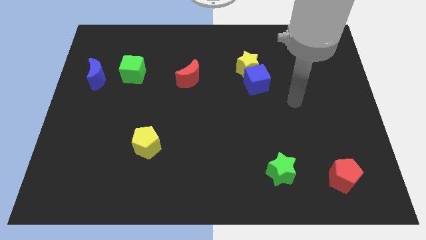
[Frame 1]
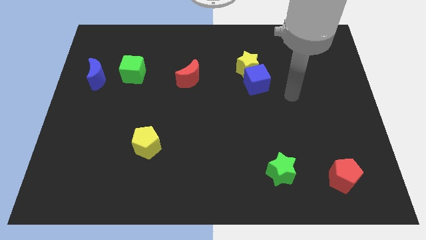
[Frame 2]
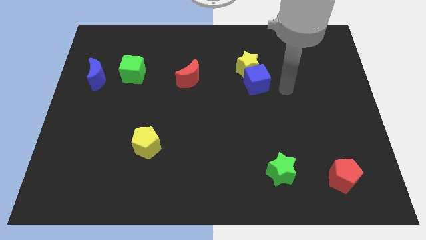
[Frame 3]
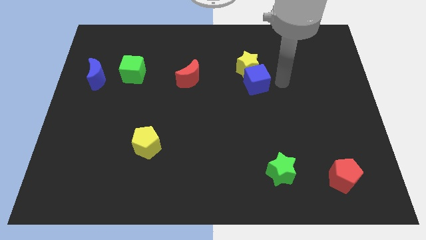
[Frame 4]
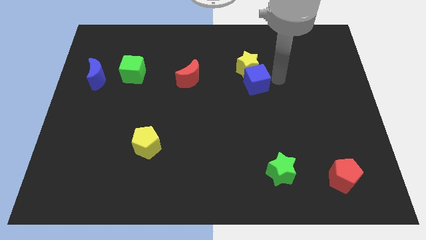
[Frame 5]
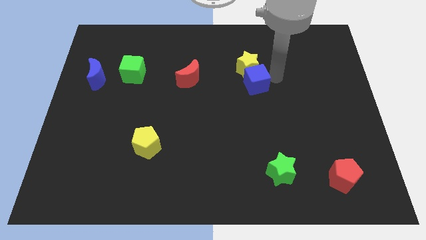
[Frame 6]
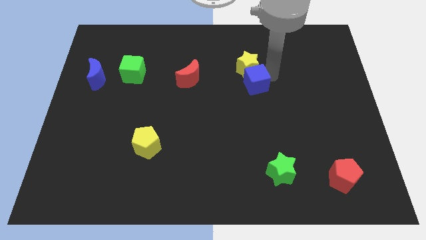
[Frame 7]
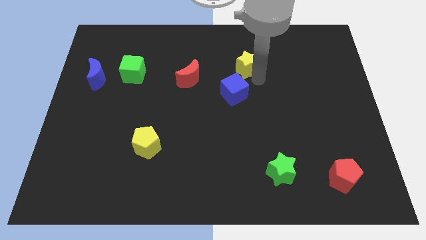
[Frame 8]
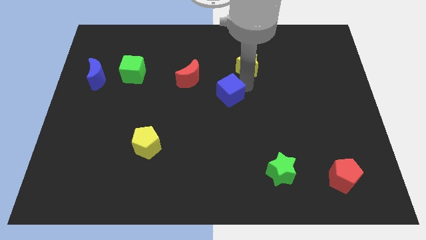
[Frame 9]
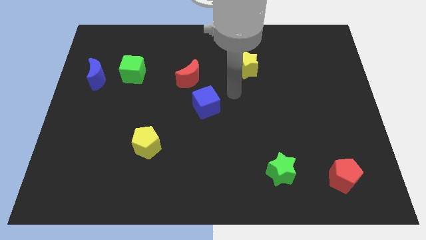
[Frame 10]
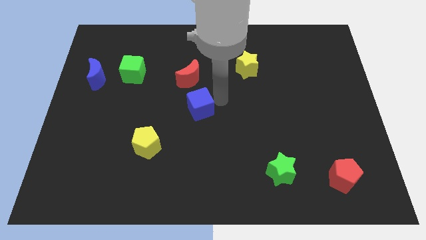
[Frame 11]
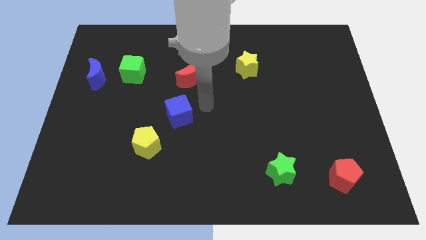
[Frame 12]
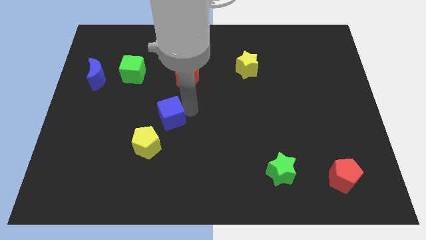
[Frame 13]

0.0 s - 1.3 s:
push the blue cube to the bottom of the red crescent

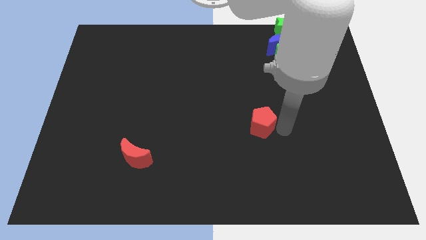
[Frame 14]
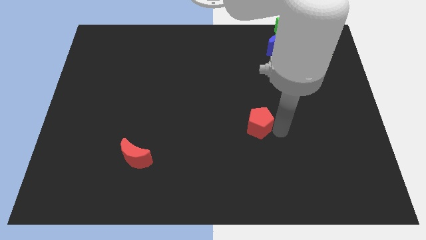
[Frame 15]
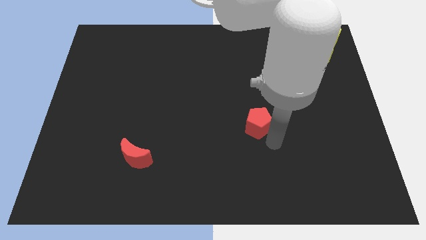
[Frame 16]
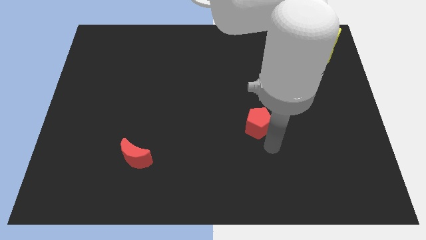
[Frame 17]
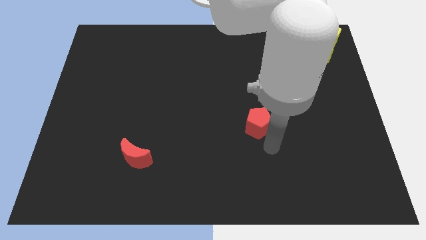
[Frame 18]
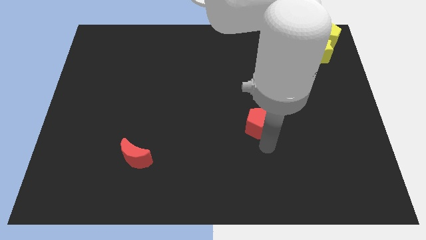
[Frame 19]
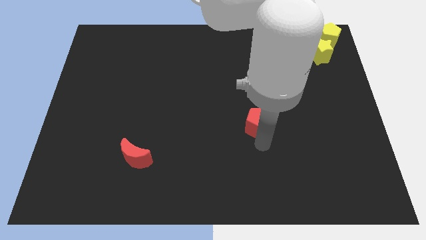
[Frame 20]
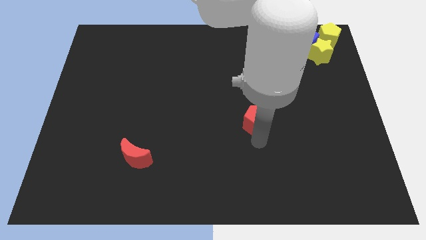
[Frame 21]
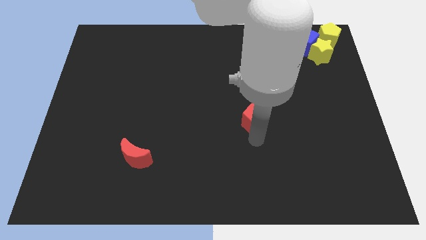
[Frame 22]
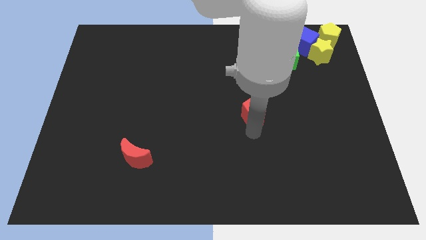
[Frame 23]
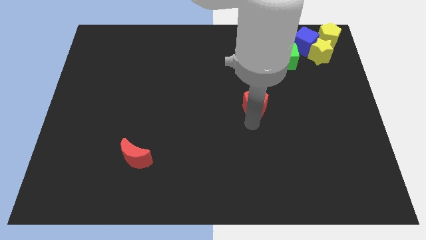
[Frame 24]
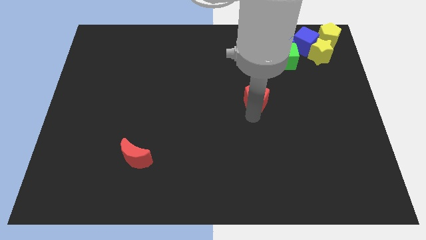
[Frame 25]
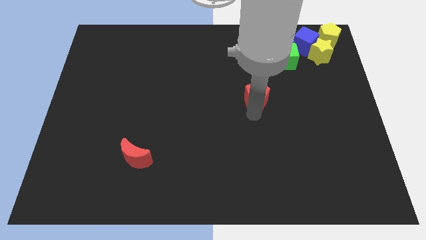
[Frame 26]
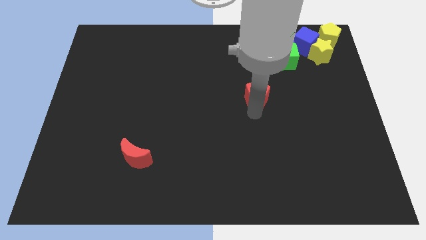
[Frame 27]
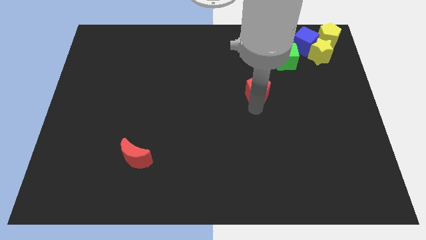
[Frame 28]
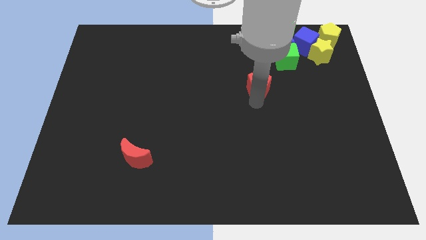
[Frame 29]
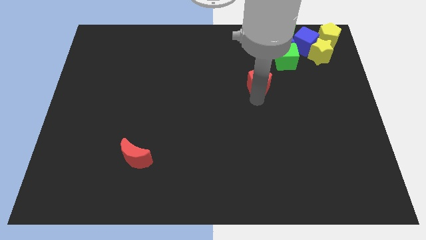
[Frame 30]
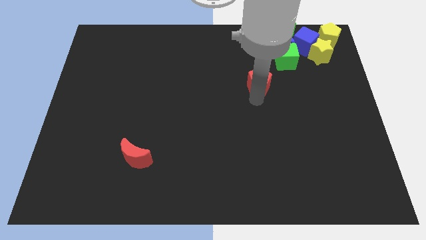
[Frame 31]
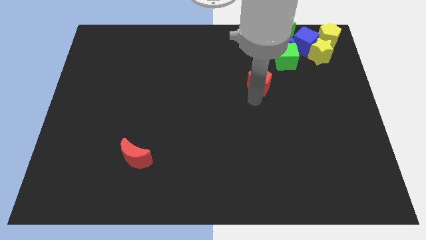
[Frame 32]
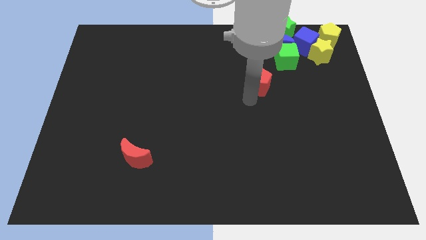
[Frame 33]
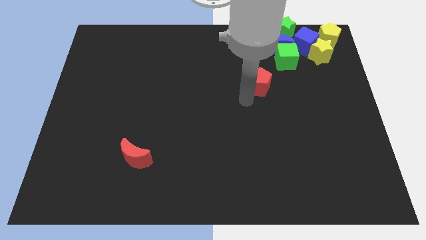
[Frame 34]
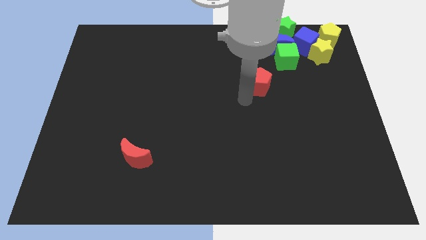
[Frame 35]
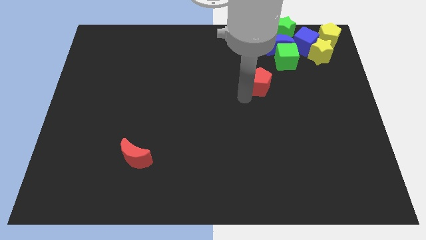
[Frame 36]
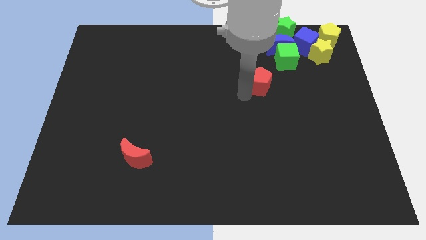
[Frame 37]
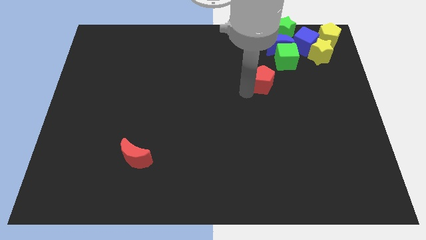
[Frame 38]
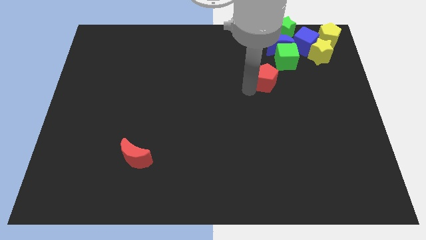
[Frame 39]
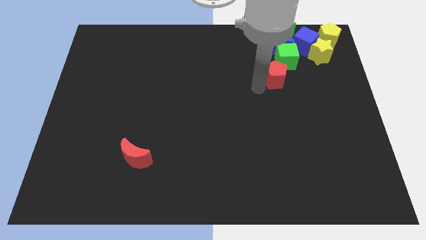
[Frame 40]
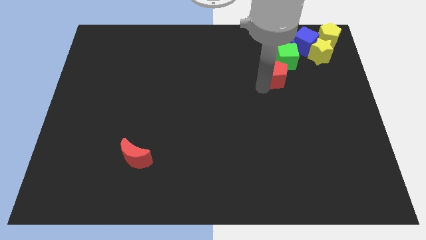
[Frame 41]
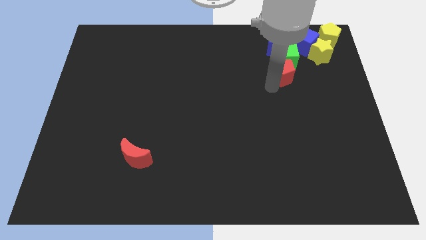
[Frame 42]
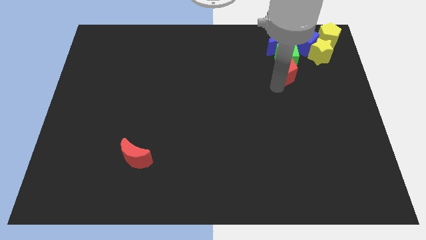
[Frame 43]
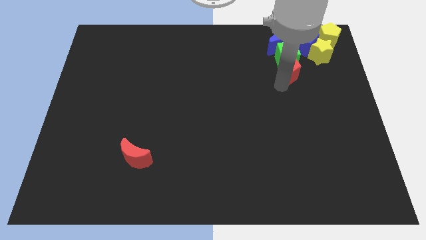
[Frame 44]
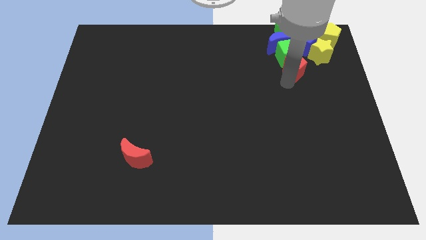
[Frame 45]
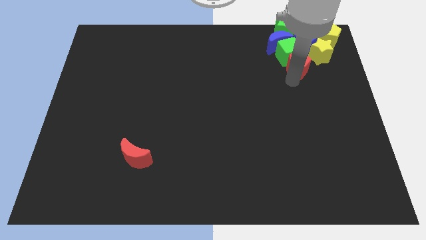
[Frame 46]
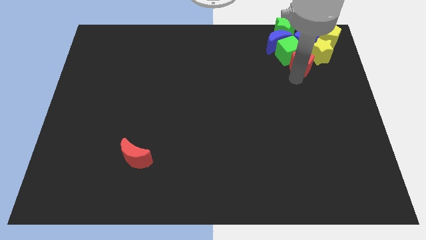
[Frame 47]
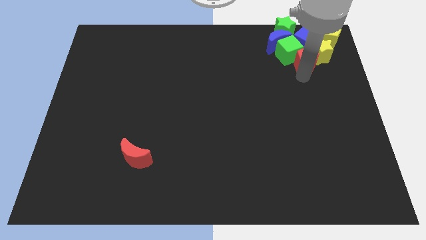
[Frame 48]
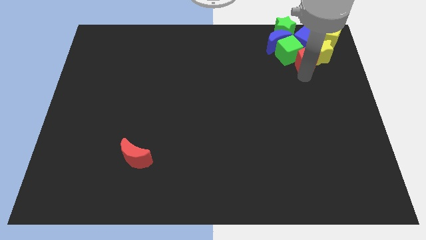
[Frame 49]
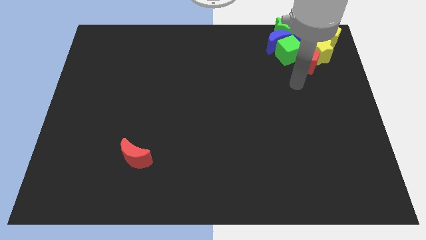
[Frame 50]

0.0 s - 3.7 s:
push red pentagon into the group of blocks

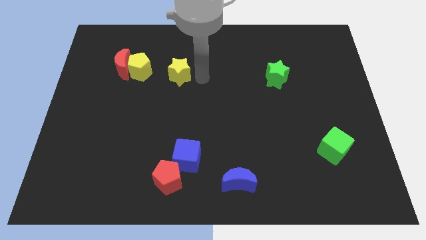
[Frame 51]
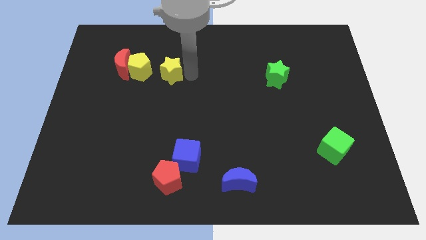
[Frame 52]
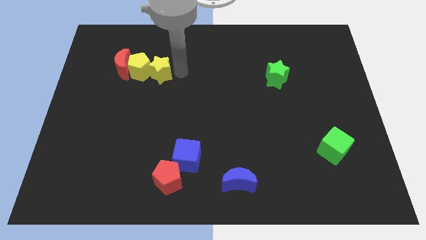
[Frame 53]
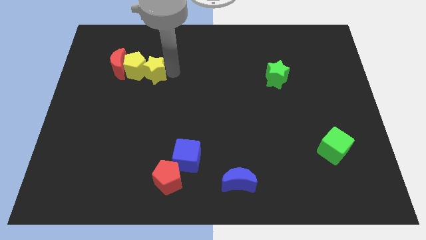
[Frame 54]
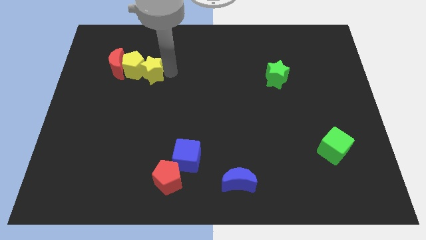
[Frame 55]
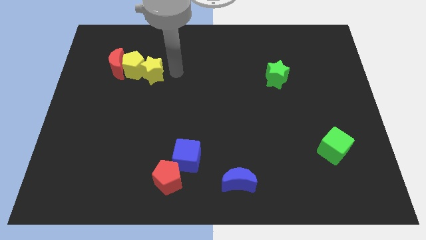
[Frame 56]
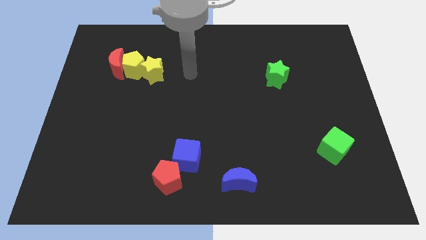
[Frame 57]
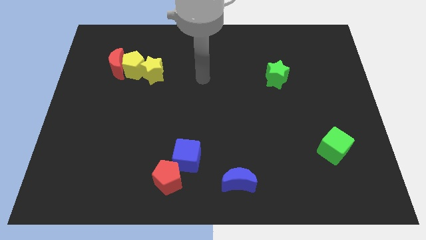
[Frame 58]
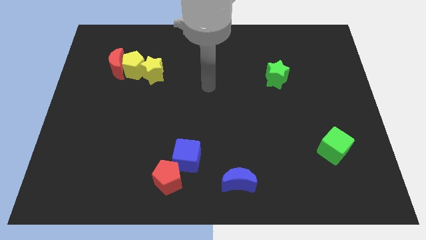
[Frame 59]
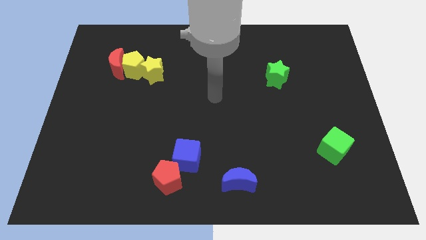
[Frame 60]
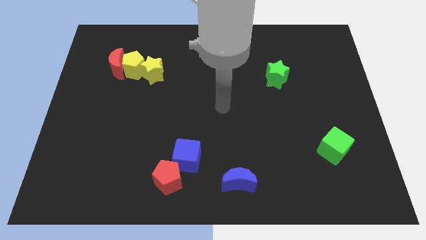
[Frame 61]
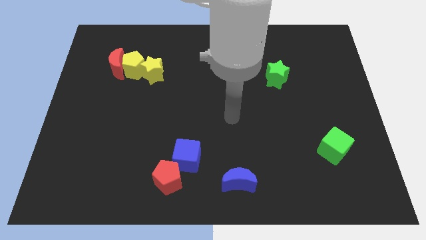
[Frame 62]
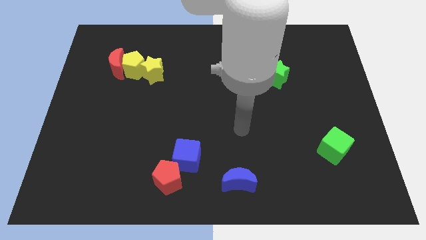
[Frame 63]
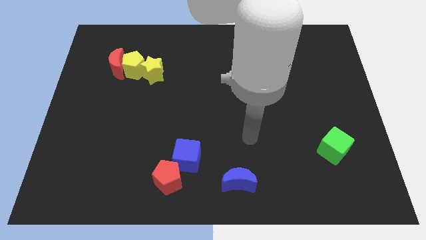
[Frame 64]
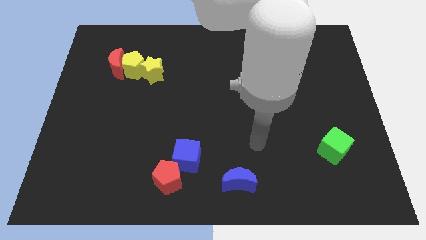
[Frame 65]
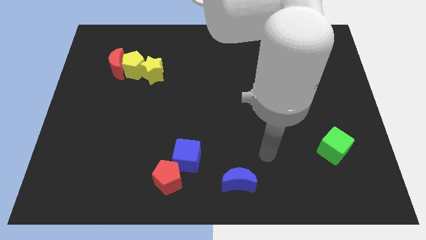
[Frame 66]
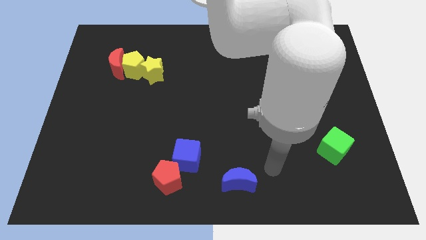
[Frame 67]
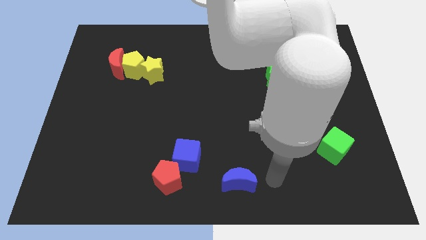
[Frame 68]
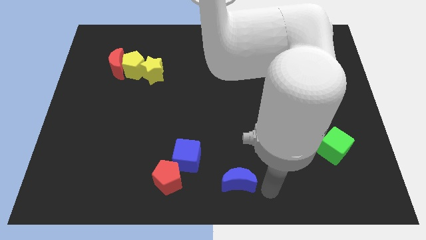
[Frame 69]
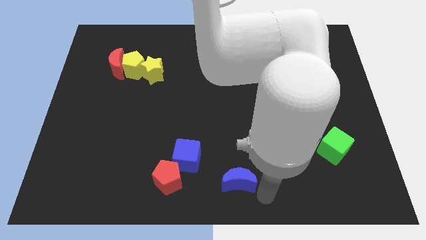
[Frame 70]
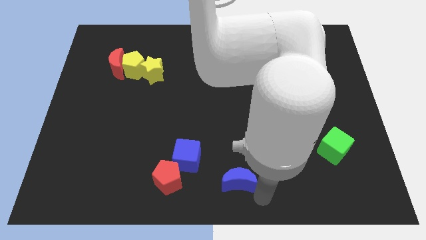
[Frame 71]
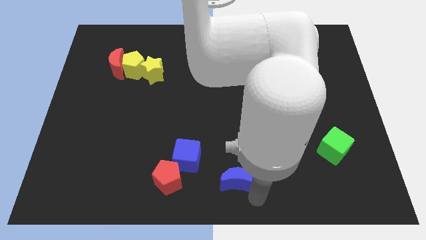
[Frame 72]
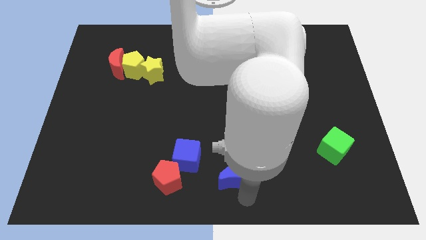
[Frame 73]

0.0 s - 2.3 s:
move your arm away from the yellow star

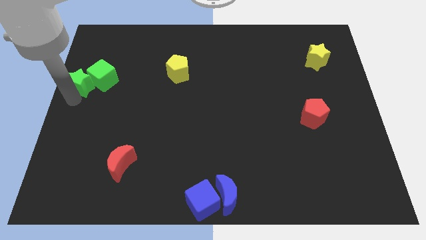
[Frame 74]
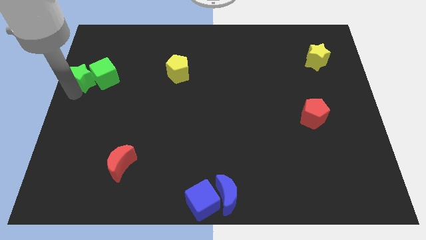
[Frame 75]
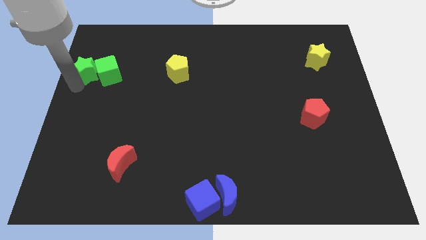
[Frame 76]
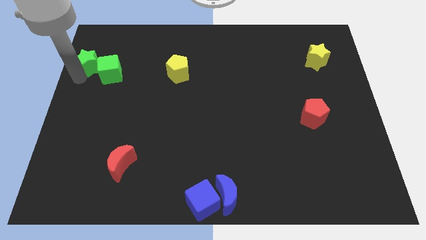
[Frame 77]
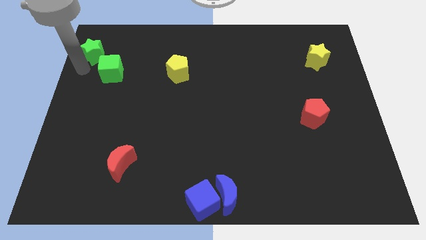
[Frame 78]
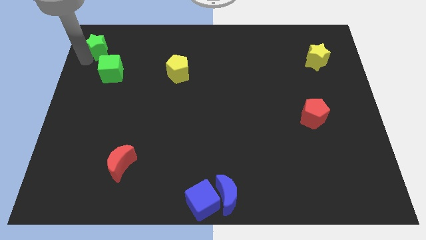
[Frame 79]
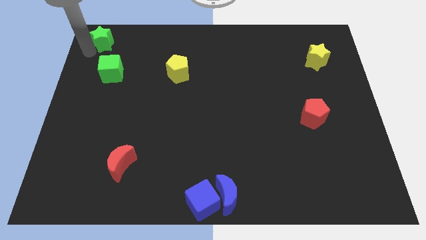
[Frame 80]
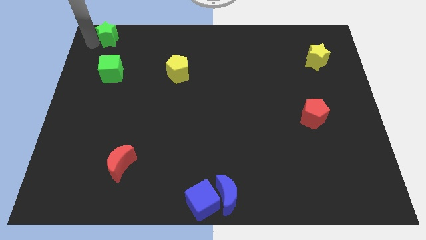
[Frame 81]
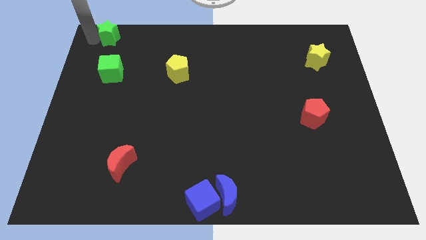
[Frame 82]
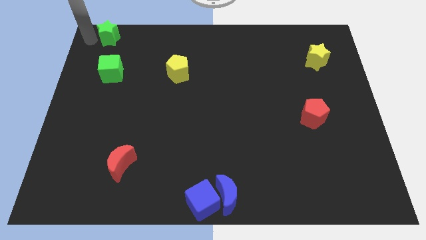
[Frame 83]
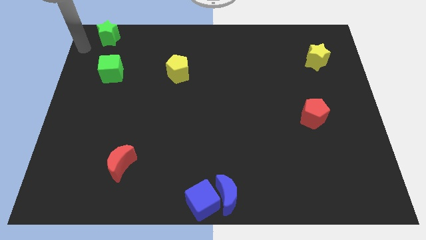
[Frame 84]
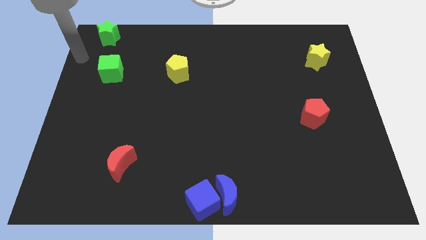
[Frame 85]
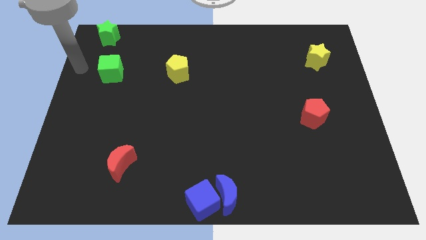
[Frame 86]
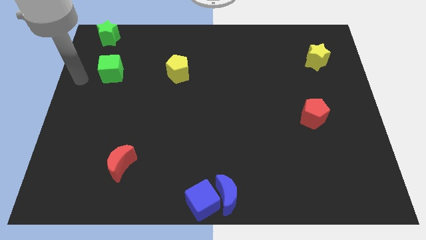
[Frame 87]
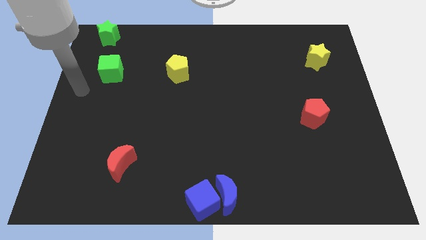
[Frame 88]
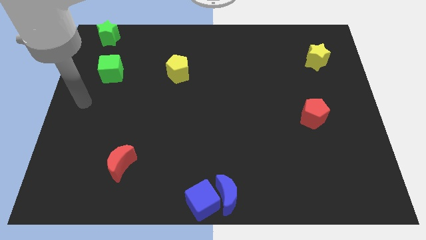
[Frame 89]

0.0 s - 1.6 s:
move the green star to the top left corner

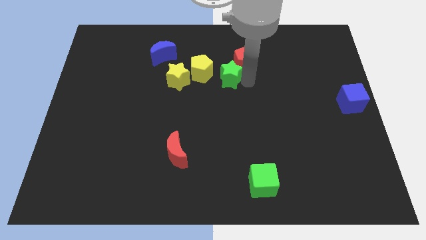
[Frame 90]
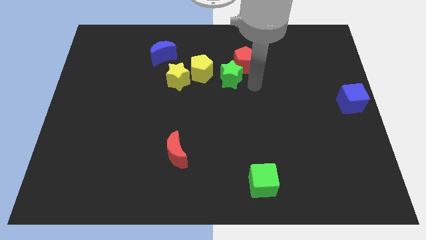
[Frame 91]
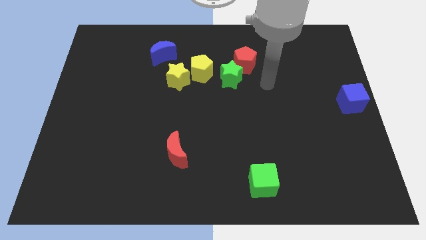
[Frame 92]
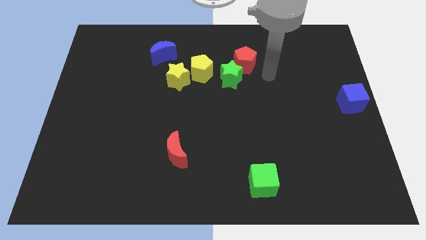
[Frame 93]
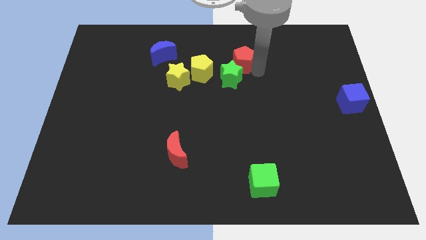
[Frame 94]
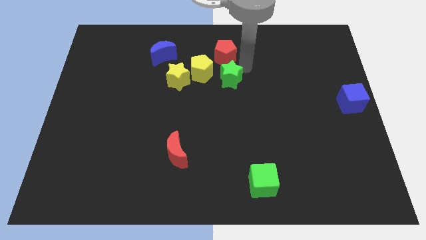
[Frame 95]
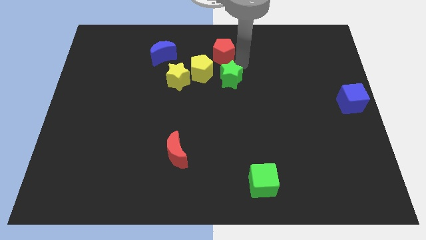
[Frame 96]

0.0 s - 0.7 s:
push red pentagon slightly to the left
